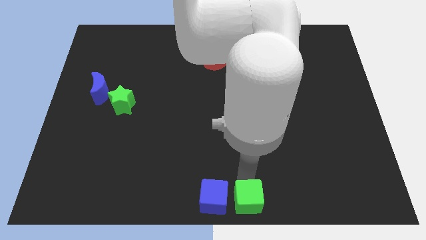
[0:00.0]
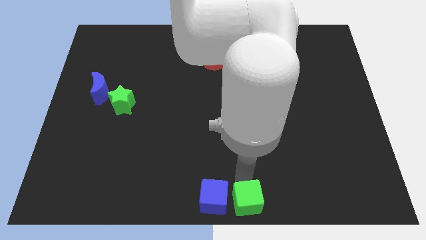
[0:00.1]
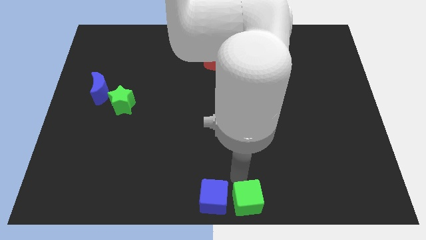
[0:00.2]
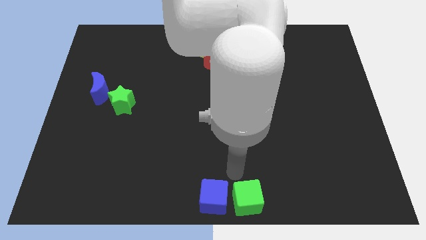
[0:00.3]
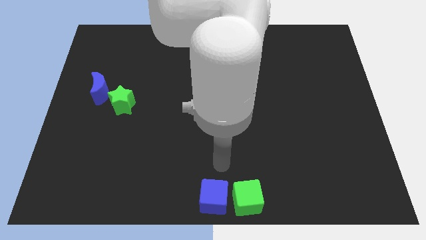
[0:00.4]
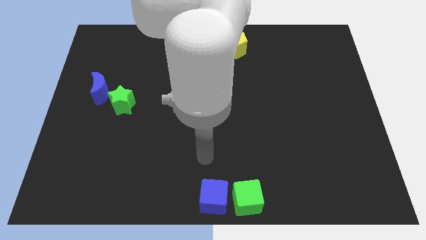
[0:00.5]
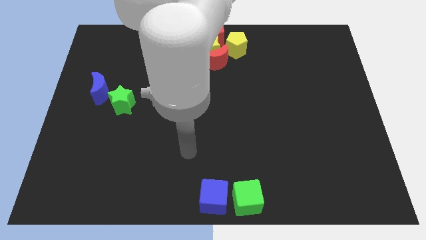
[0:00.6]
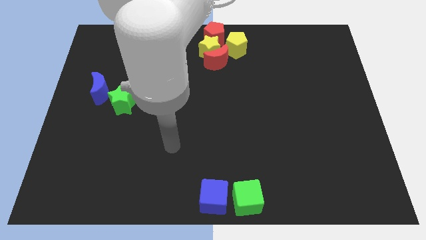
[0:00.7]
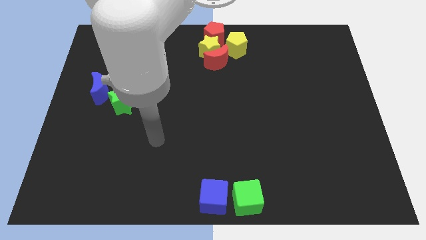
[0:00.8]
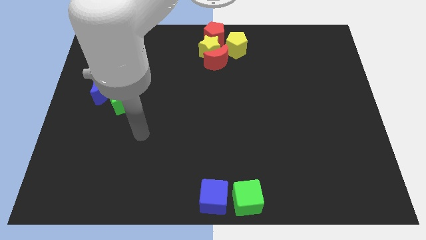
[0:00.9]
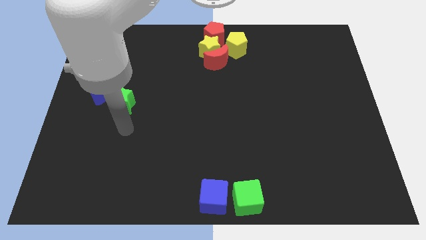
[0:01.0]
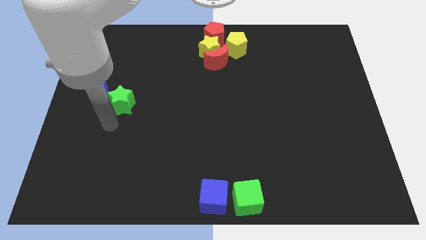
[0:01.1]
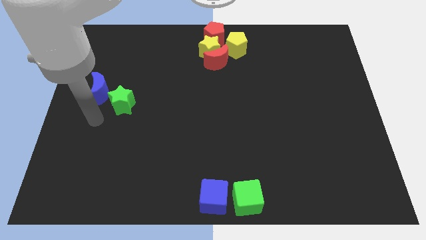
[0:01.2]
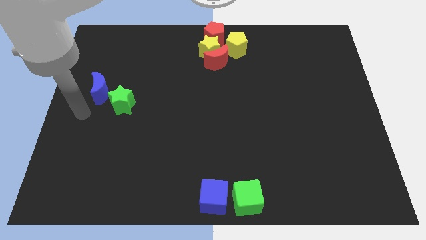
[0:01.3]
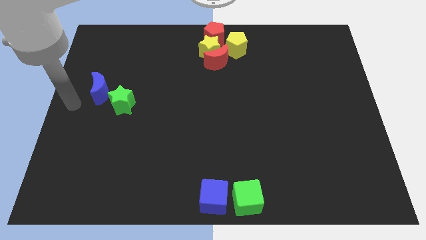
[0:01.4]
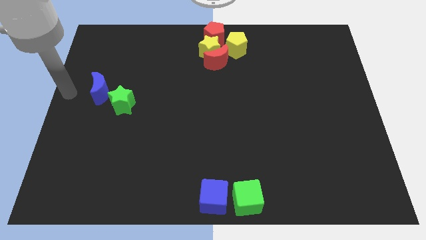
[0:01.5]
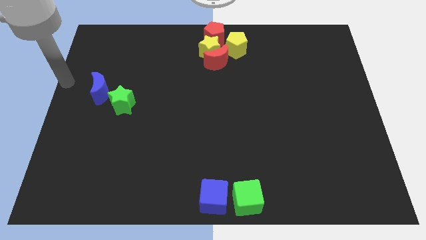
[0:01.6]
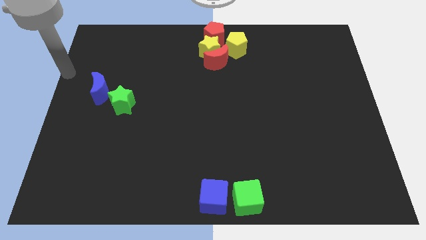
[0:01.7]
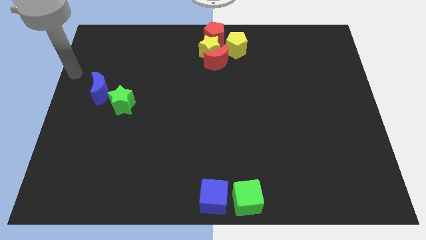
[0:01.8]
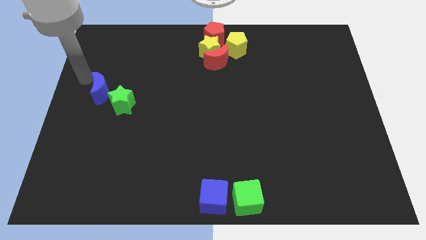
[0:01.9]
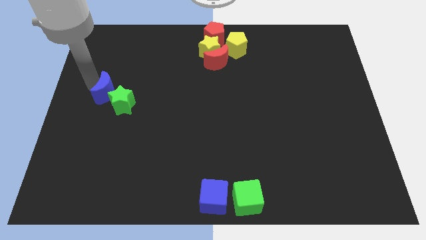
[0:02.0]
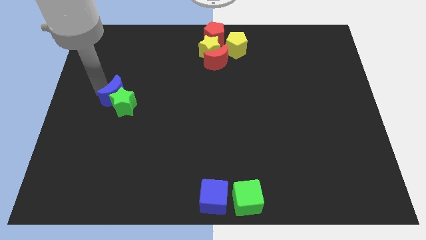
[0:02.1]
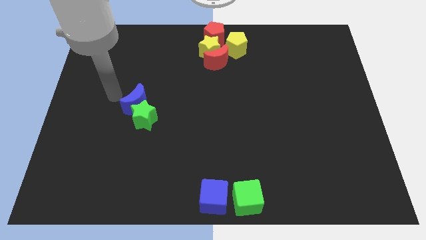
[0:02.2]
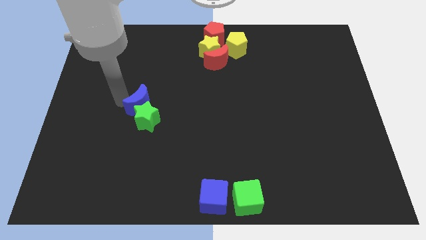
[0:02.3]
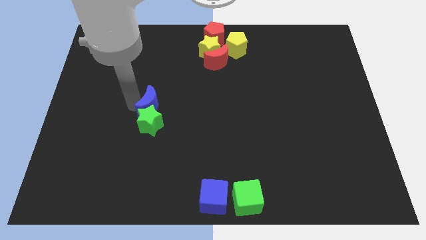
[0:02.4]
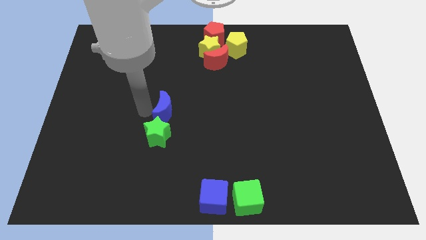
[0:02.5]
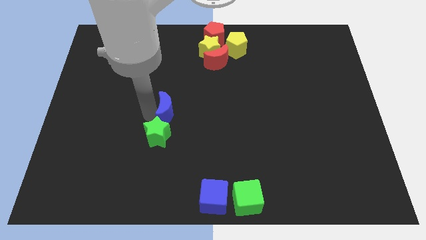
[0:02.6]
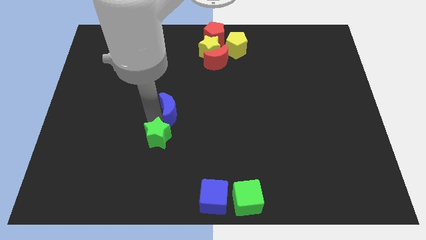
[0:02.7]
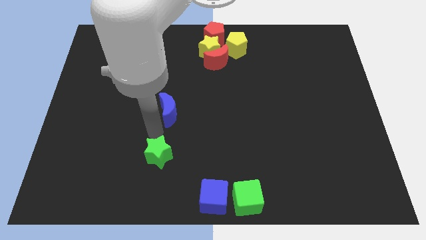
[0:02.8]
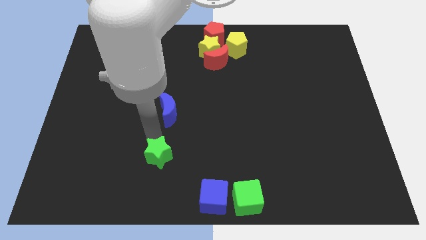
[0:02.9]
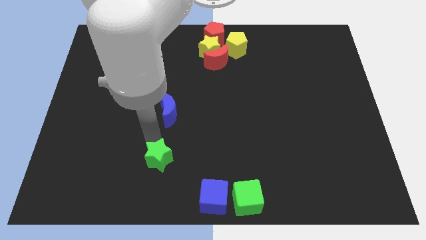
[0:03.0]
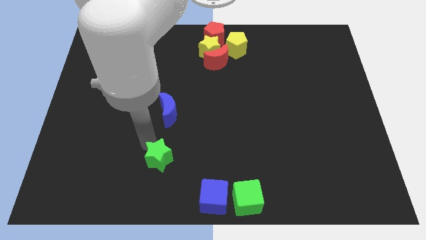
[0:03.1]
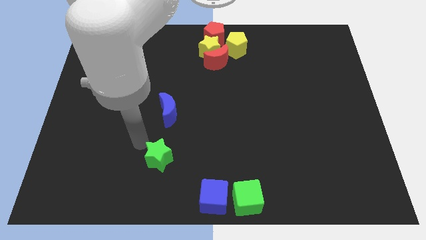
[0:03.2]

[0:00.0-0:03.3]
separate green star from the blue moon

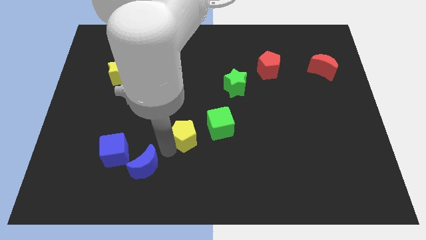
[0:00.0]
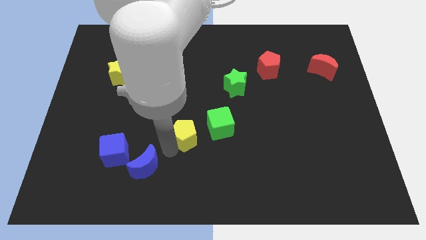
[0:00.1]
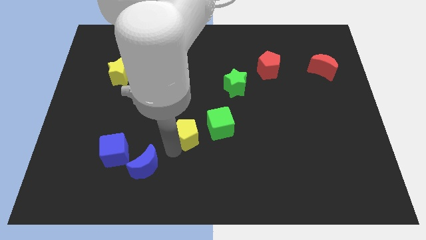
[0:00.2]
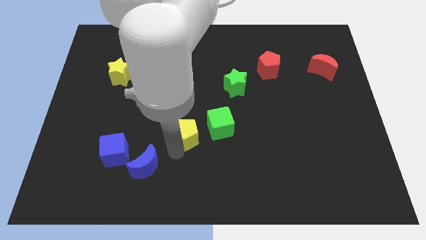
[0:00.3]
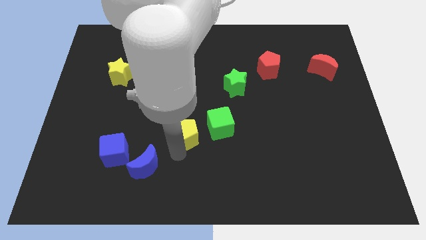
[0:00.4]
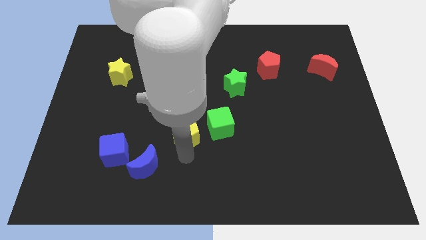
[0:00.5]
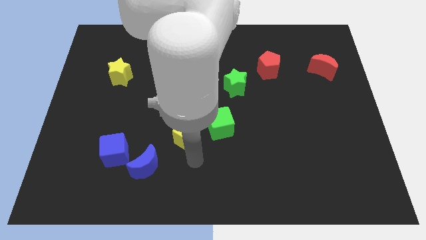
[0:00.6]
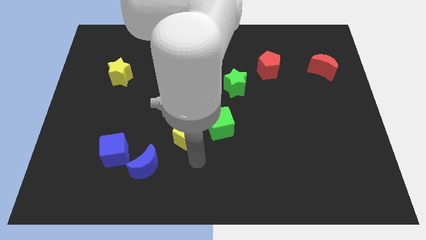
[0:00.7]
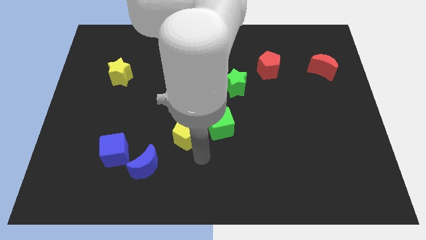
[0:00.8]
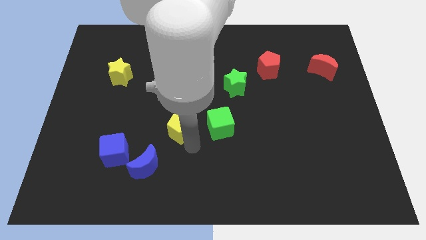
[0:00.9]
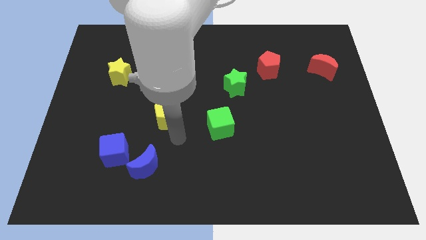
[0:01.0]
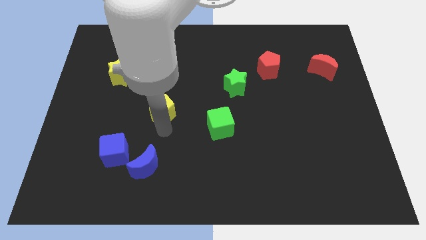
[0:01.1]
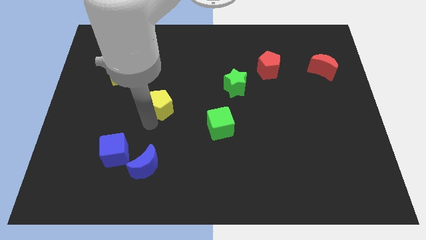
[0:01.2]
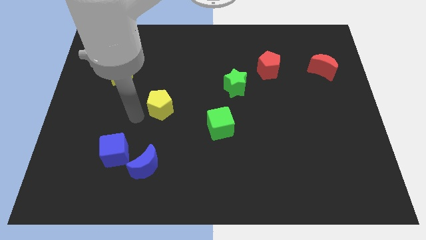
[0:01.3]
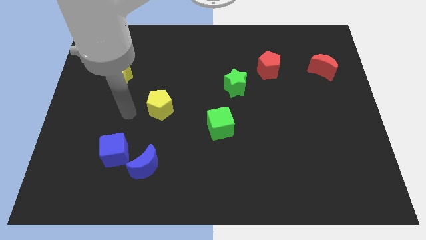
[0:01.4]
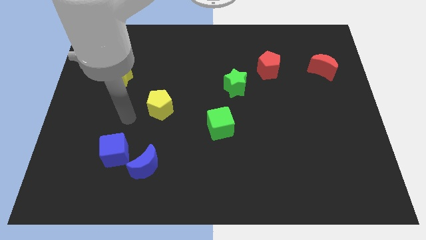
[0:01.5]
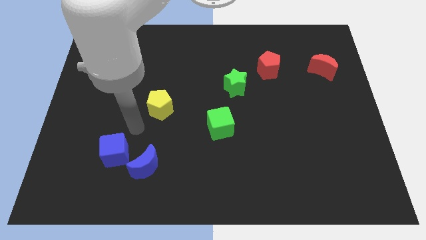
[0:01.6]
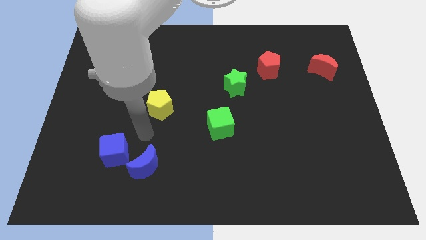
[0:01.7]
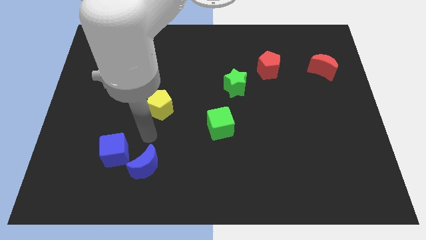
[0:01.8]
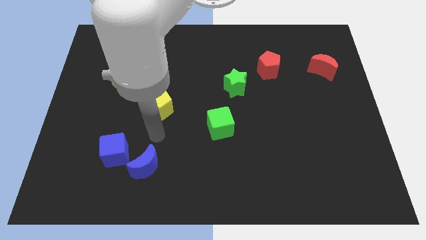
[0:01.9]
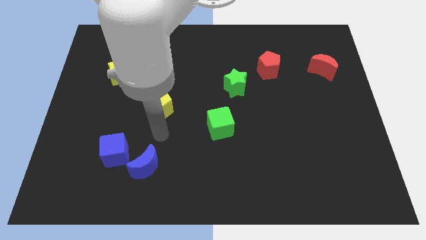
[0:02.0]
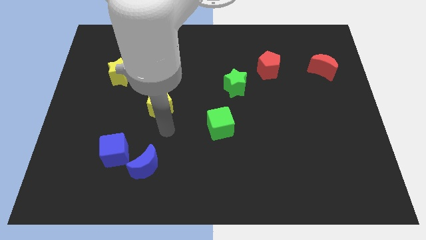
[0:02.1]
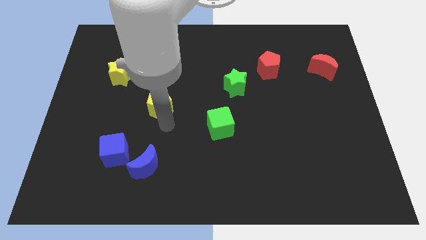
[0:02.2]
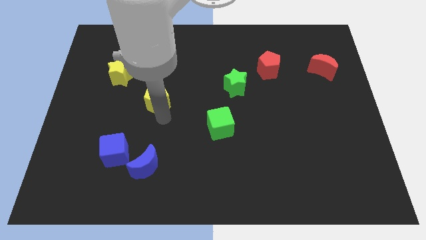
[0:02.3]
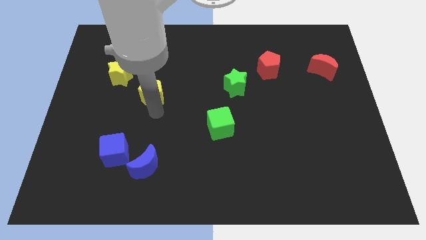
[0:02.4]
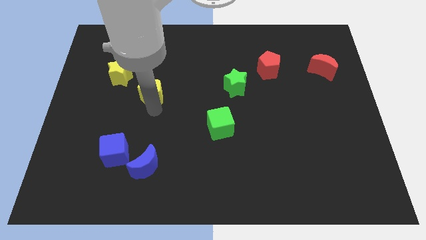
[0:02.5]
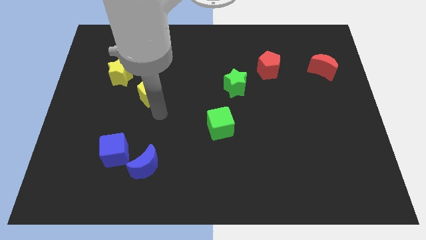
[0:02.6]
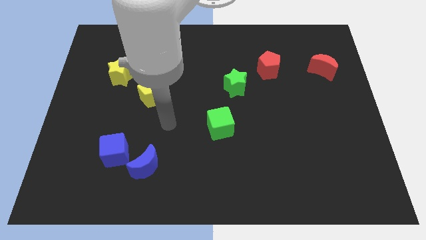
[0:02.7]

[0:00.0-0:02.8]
push the yellow pentagon towards the diagonal bottom right corner of the yellow star

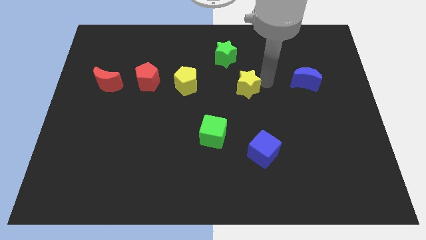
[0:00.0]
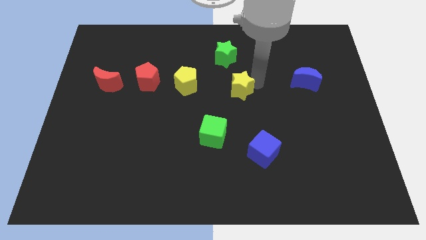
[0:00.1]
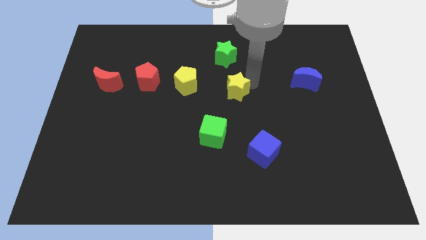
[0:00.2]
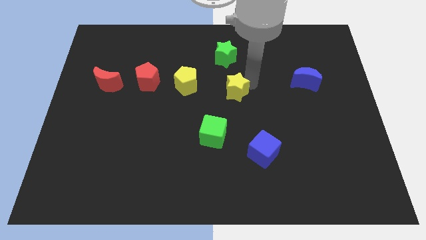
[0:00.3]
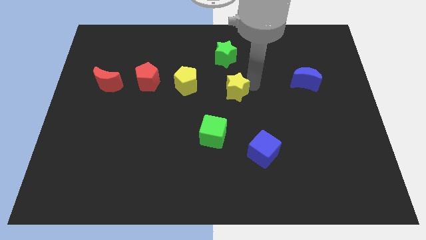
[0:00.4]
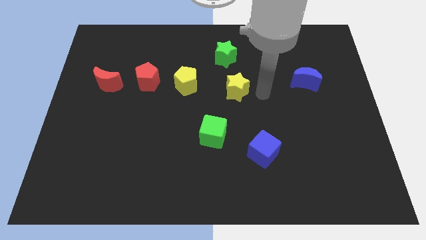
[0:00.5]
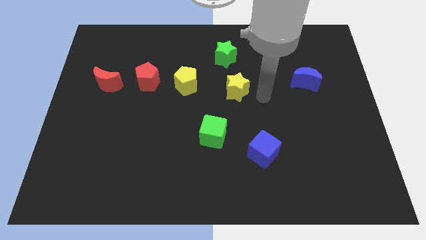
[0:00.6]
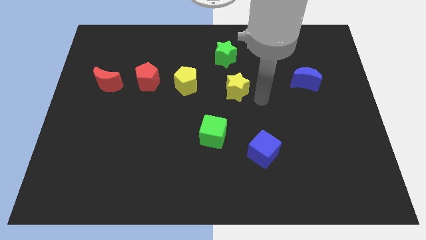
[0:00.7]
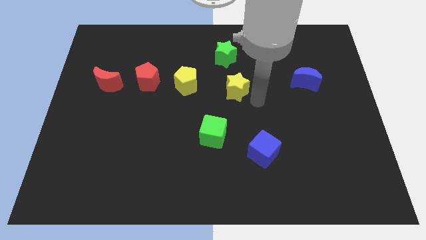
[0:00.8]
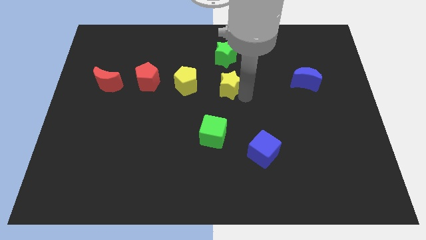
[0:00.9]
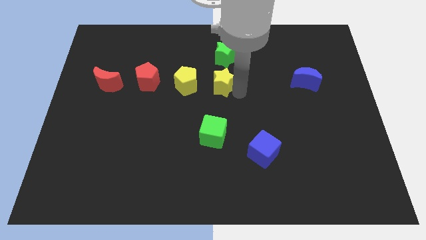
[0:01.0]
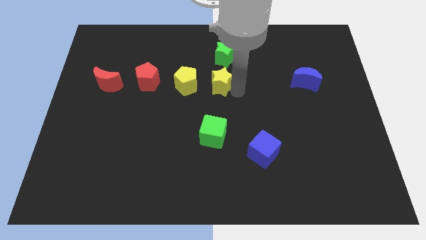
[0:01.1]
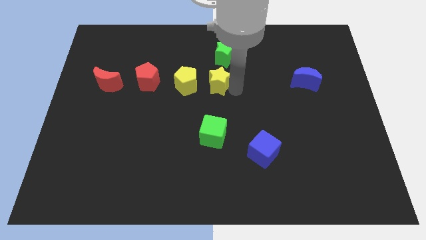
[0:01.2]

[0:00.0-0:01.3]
move the yellow star towards the yellow pentagon

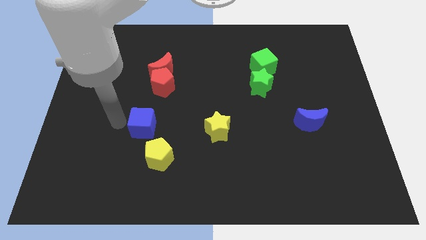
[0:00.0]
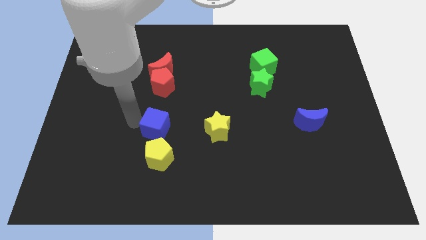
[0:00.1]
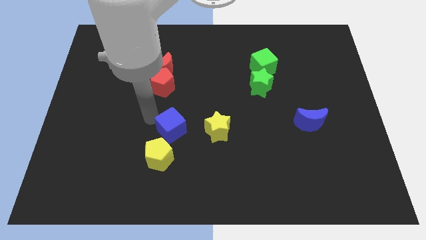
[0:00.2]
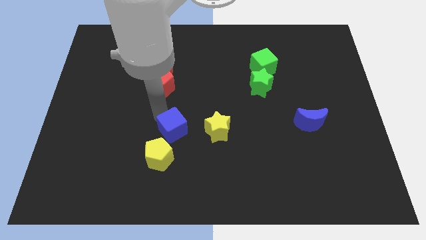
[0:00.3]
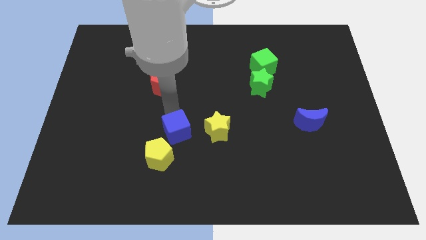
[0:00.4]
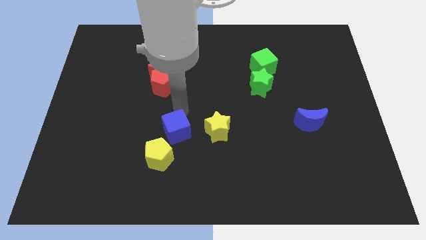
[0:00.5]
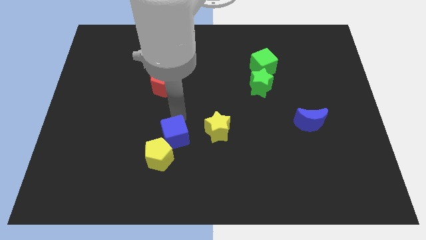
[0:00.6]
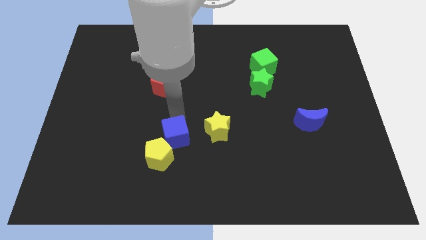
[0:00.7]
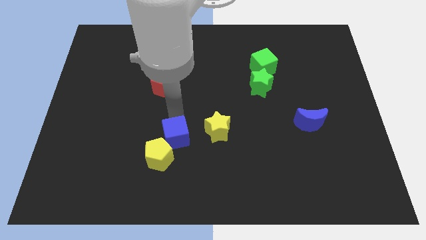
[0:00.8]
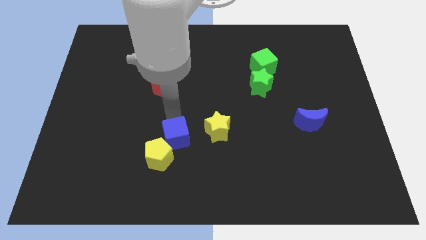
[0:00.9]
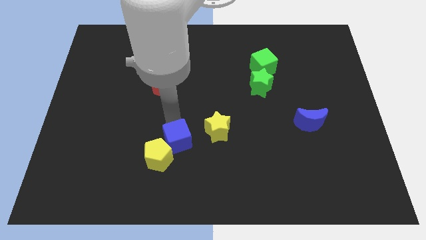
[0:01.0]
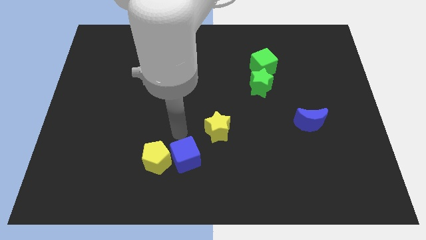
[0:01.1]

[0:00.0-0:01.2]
push the blue cube to the right of yellow pentagon

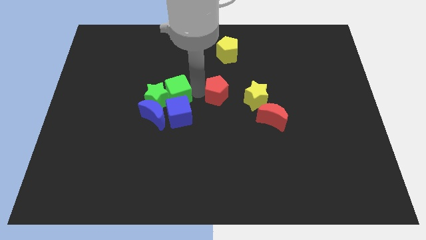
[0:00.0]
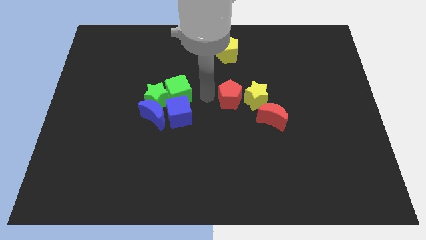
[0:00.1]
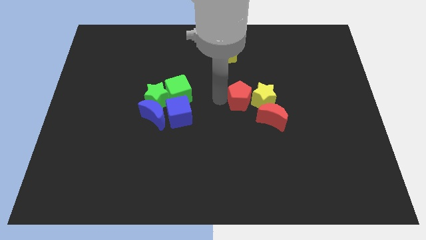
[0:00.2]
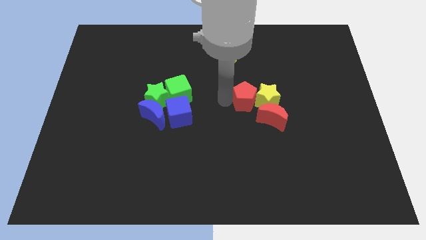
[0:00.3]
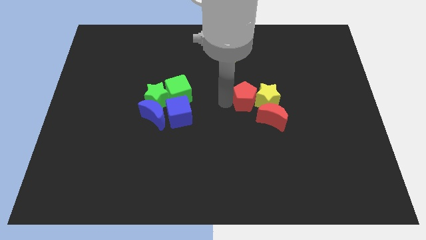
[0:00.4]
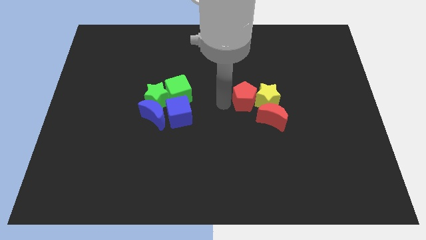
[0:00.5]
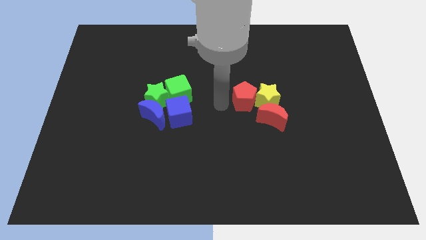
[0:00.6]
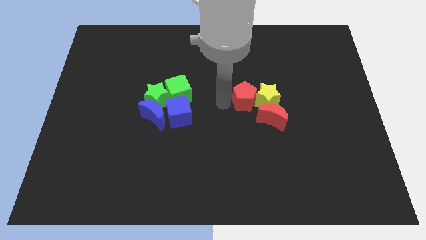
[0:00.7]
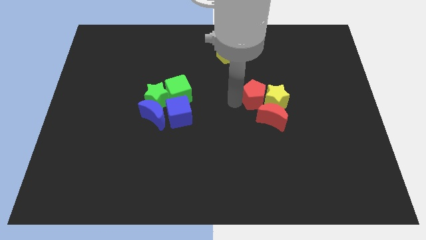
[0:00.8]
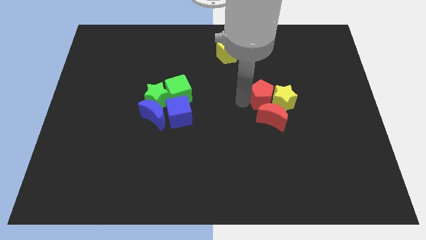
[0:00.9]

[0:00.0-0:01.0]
push the red pentagon into the yellow star
